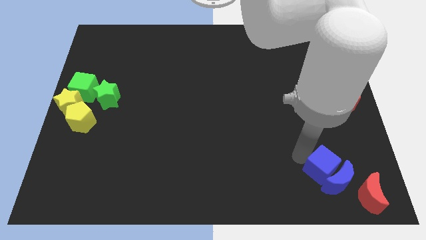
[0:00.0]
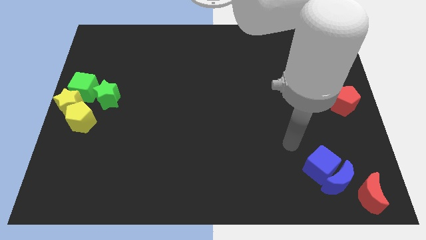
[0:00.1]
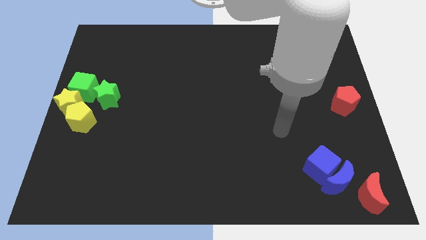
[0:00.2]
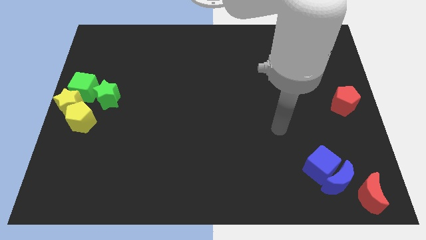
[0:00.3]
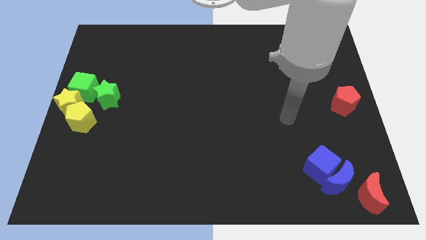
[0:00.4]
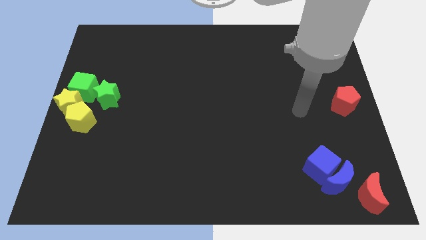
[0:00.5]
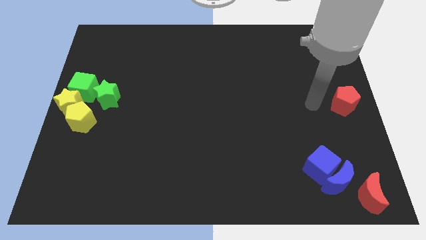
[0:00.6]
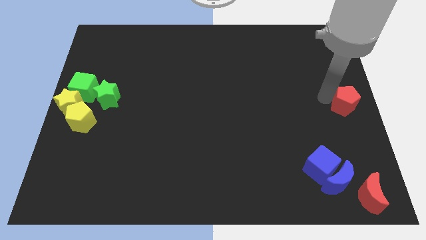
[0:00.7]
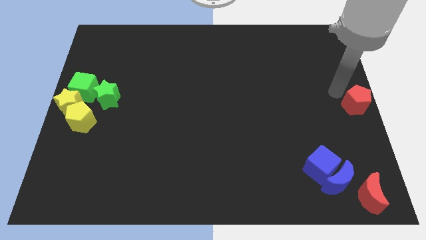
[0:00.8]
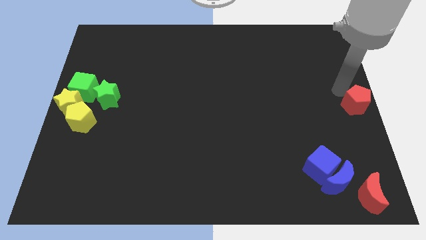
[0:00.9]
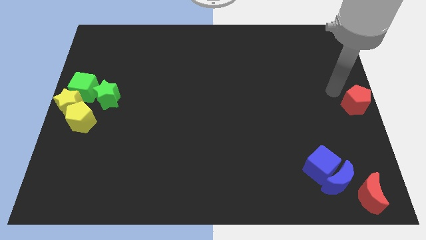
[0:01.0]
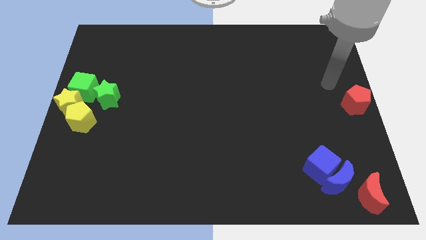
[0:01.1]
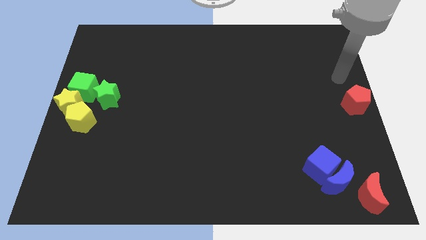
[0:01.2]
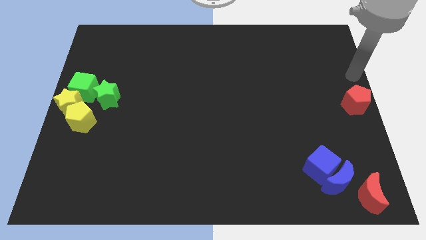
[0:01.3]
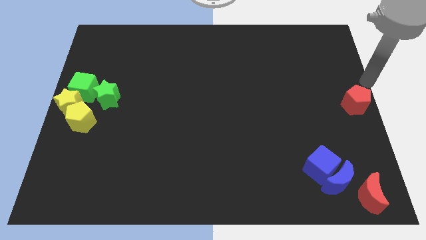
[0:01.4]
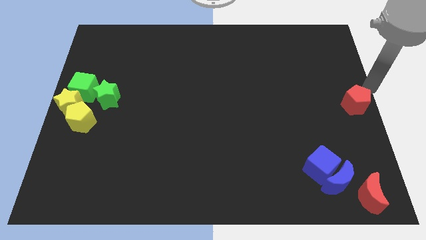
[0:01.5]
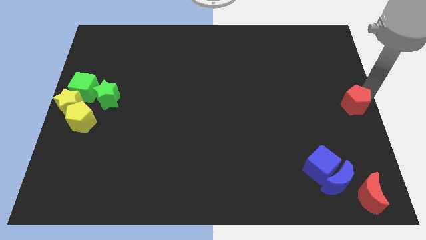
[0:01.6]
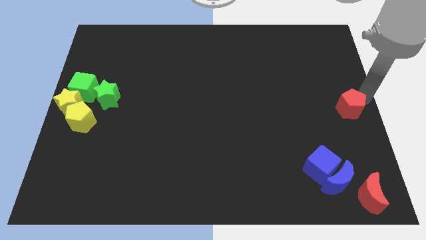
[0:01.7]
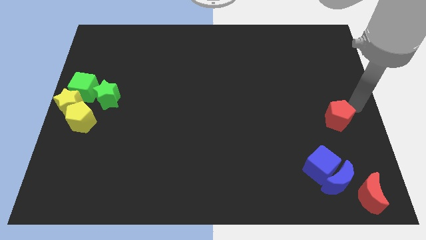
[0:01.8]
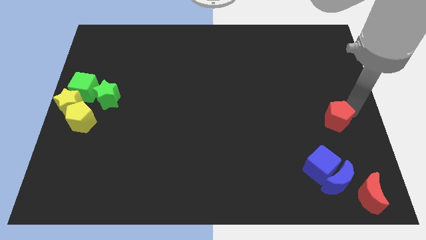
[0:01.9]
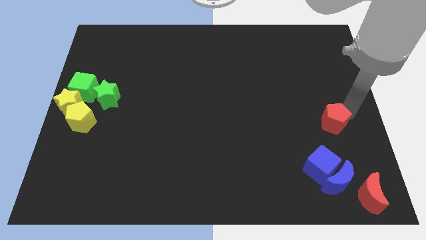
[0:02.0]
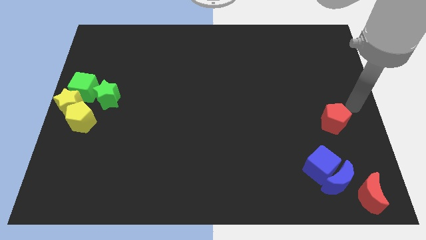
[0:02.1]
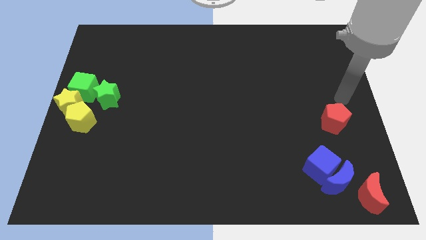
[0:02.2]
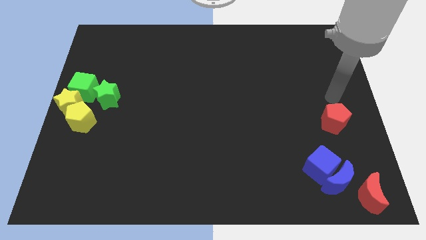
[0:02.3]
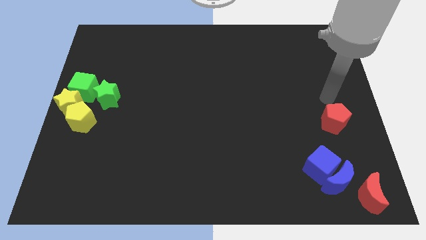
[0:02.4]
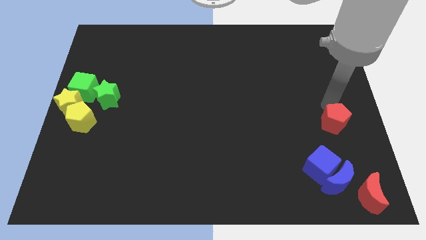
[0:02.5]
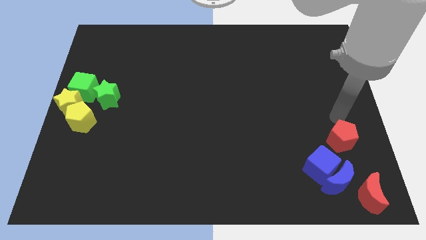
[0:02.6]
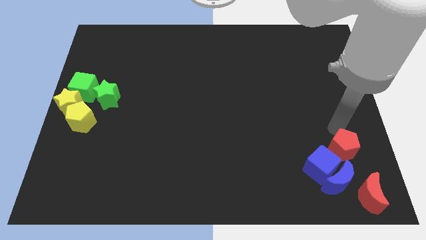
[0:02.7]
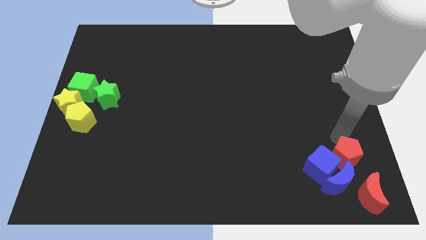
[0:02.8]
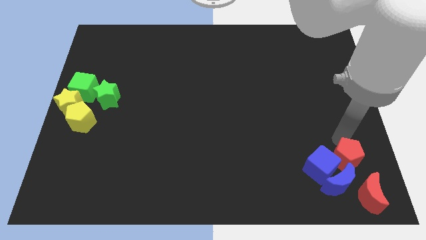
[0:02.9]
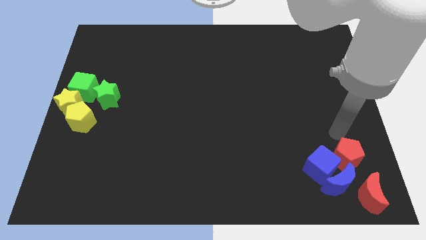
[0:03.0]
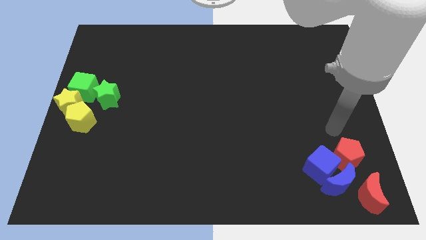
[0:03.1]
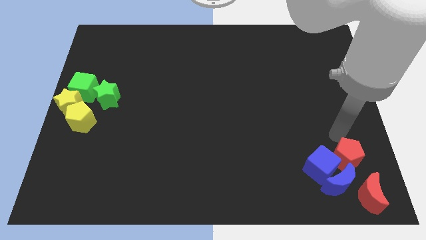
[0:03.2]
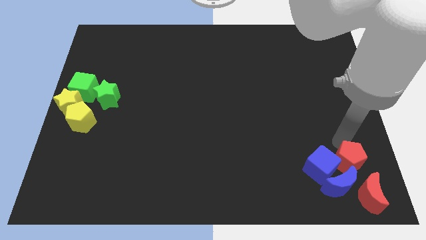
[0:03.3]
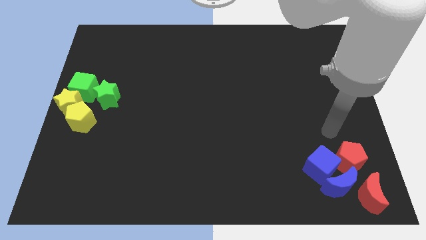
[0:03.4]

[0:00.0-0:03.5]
push the red pentagon towards the blue blocks

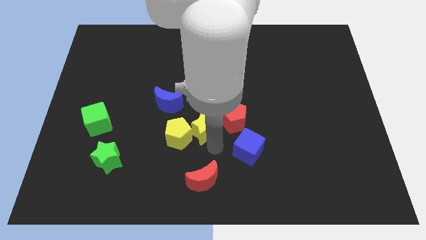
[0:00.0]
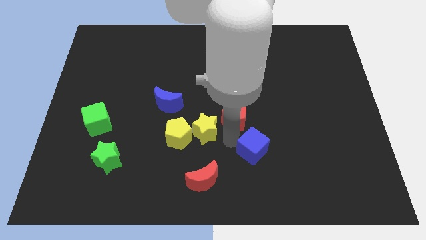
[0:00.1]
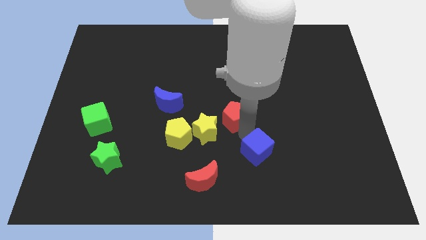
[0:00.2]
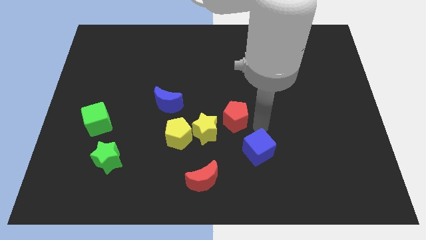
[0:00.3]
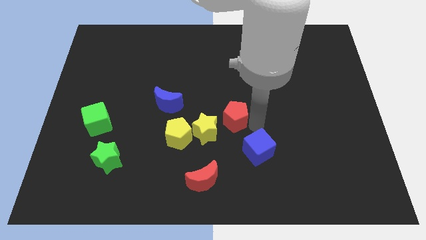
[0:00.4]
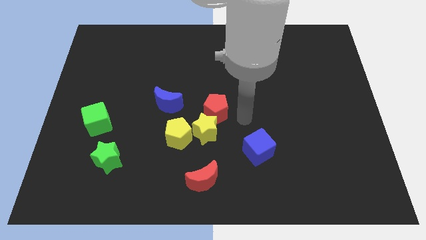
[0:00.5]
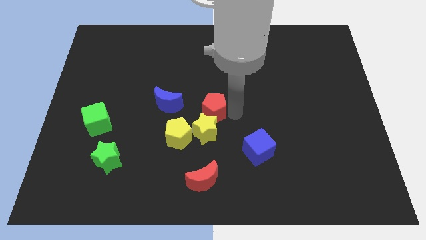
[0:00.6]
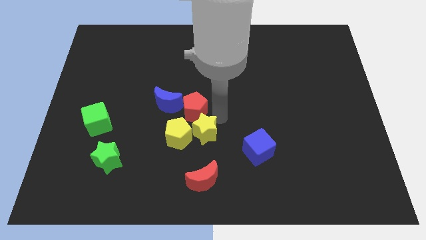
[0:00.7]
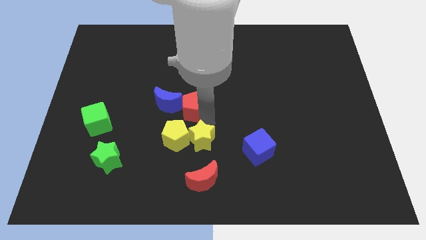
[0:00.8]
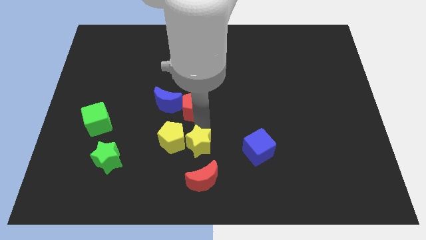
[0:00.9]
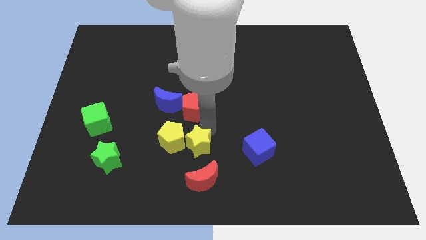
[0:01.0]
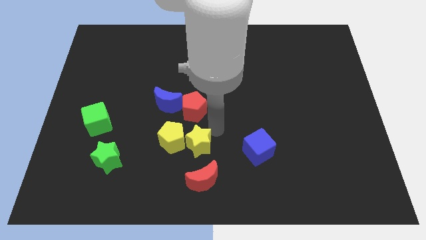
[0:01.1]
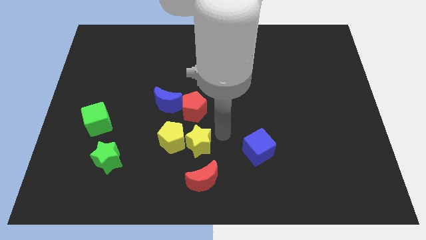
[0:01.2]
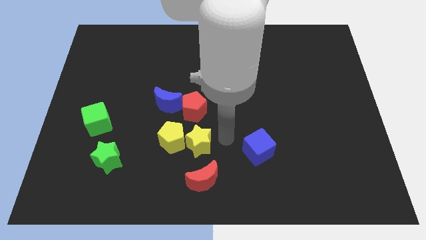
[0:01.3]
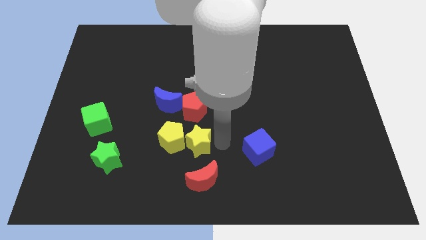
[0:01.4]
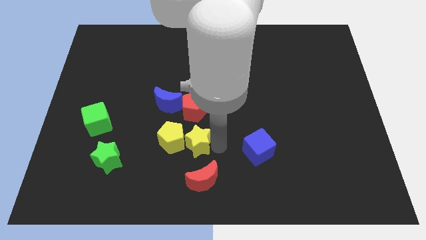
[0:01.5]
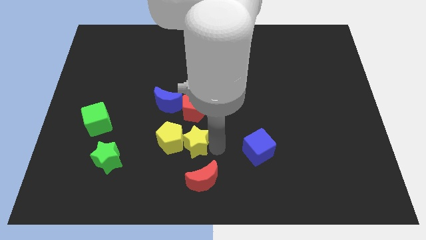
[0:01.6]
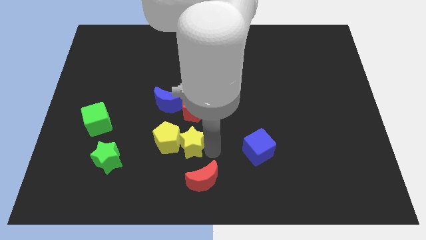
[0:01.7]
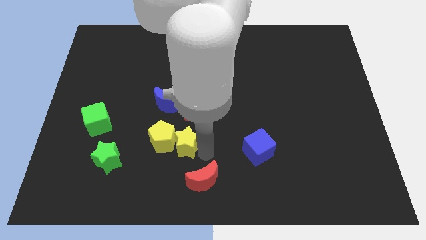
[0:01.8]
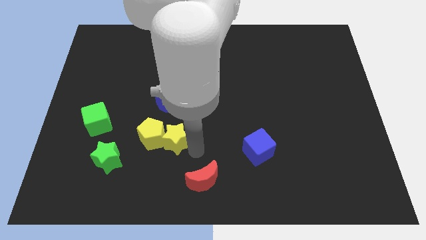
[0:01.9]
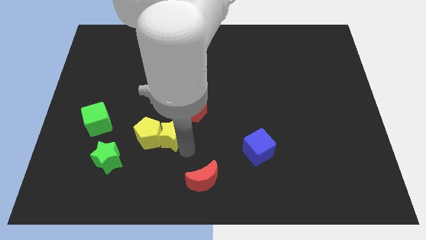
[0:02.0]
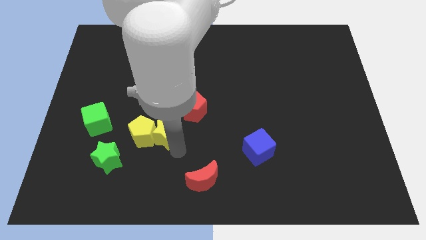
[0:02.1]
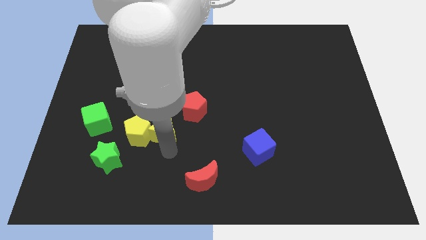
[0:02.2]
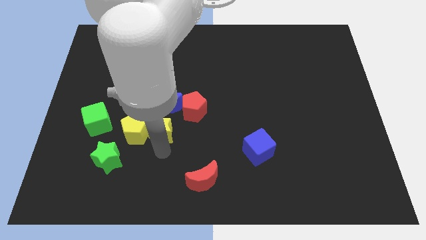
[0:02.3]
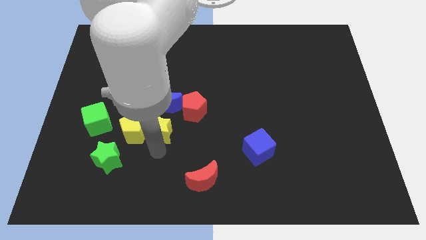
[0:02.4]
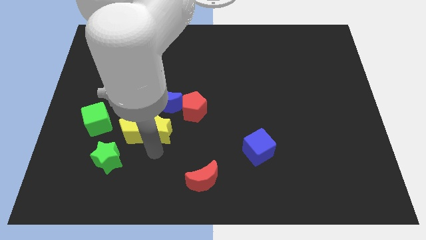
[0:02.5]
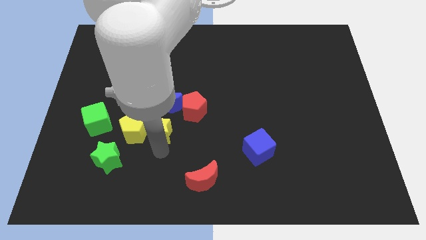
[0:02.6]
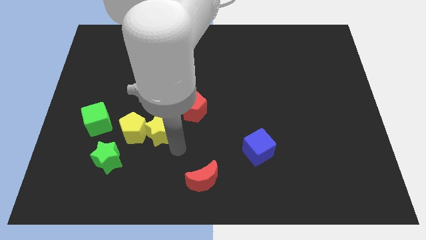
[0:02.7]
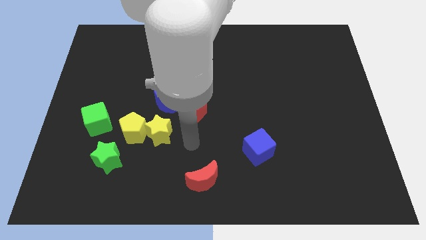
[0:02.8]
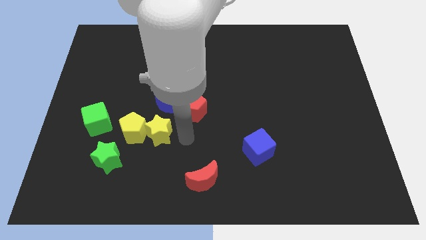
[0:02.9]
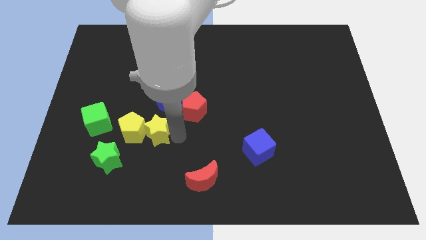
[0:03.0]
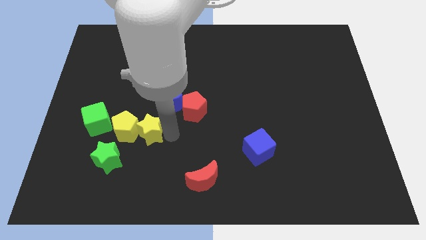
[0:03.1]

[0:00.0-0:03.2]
drag the red pentagon to the right side of blue moon

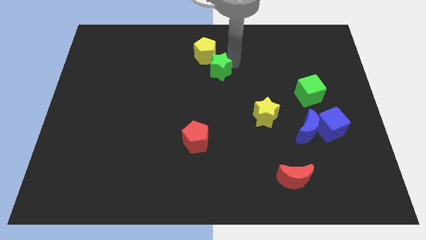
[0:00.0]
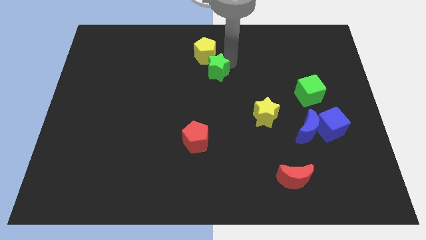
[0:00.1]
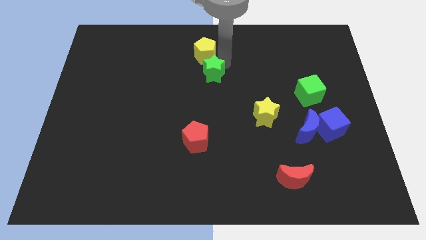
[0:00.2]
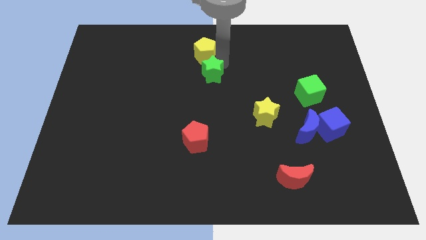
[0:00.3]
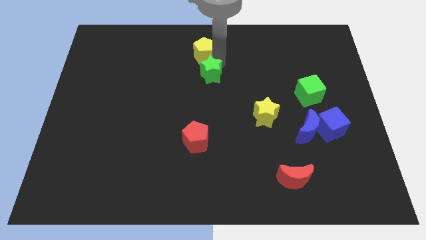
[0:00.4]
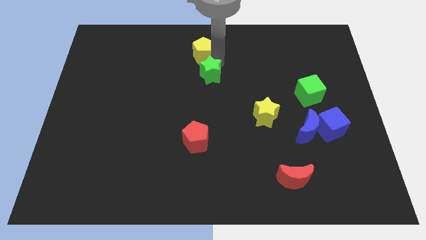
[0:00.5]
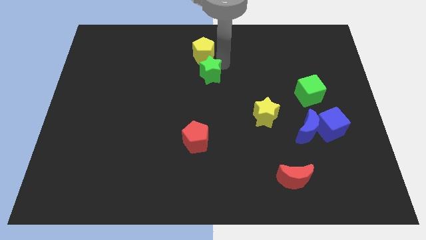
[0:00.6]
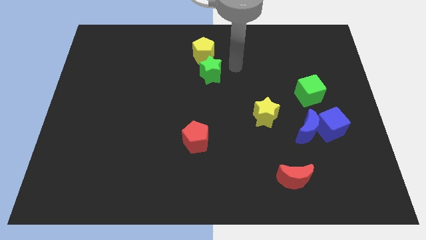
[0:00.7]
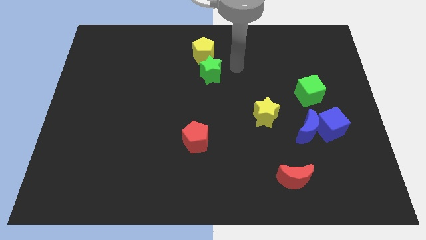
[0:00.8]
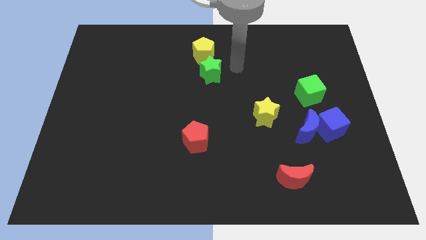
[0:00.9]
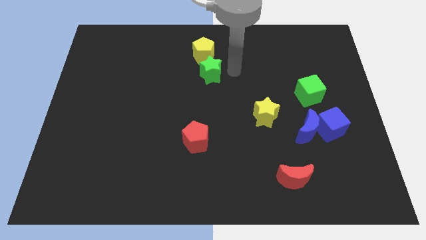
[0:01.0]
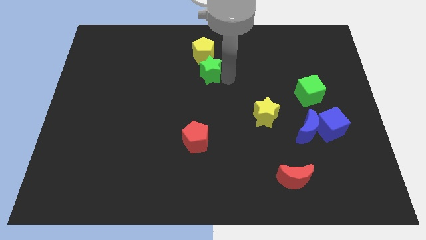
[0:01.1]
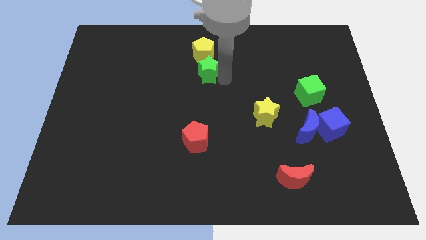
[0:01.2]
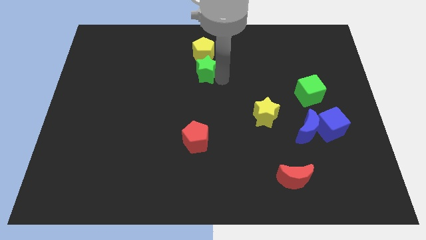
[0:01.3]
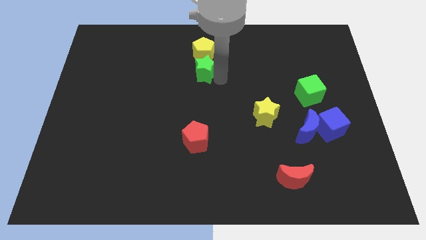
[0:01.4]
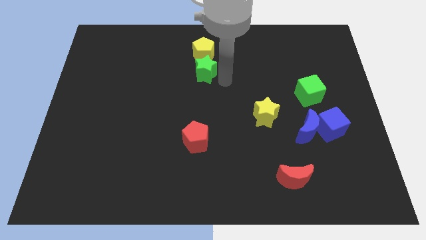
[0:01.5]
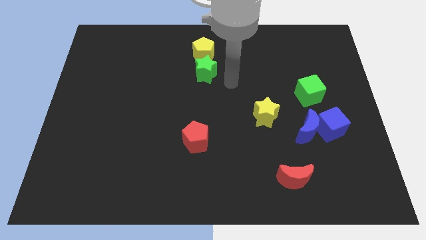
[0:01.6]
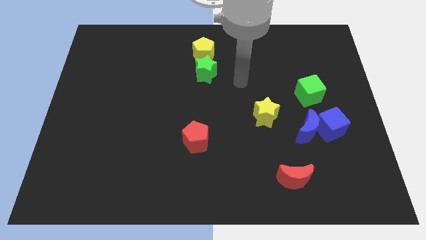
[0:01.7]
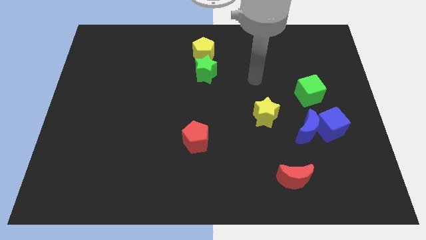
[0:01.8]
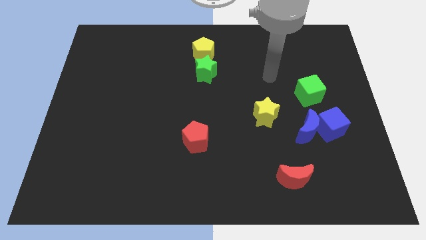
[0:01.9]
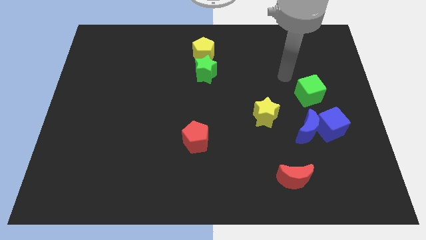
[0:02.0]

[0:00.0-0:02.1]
adjust the green star at the bottom of yellow pentagon
